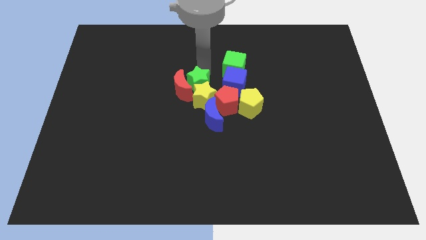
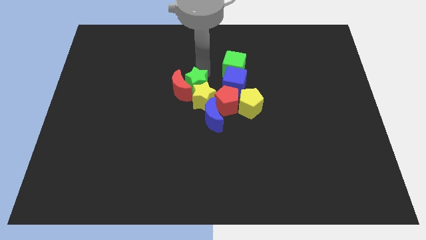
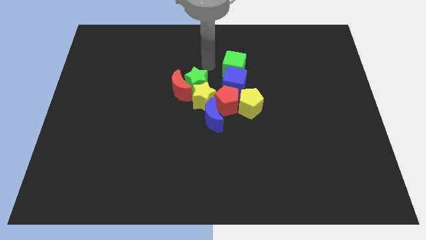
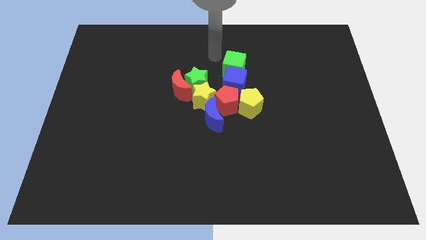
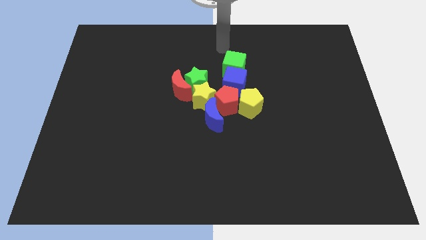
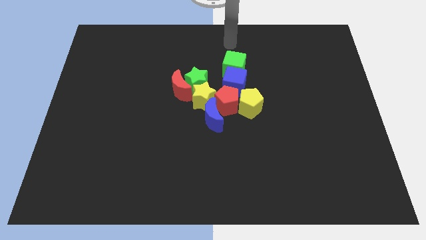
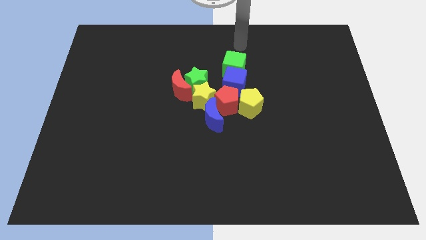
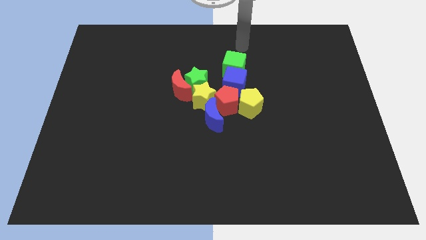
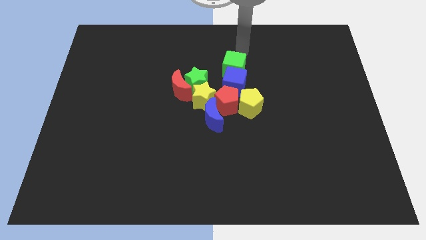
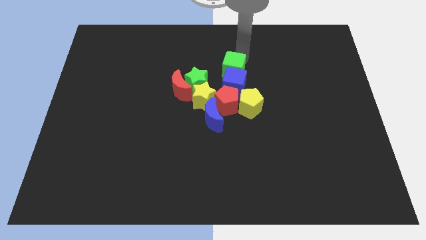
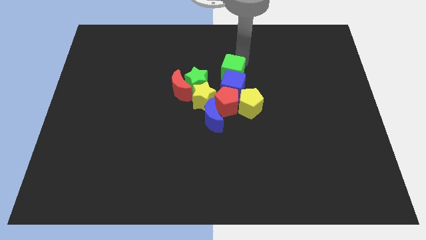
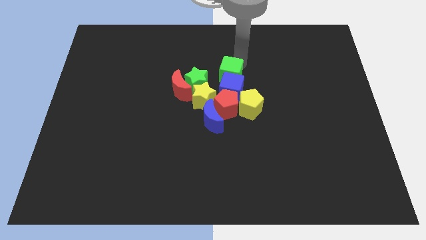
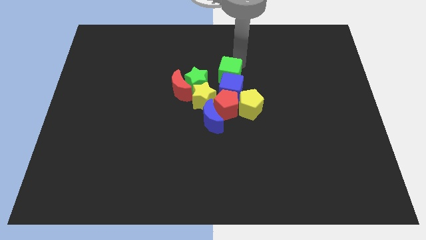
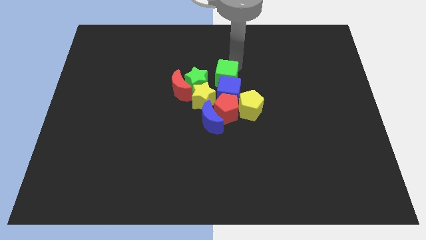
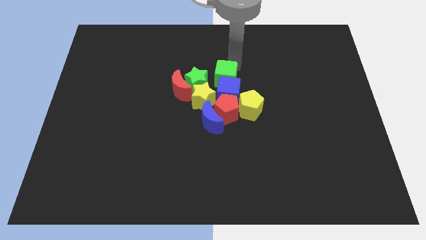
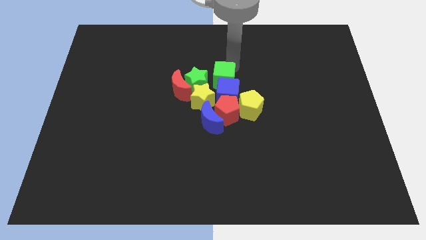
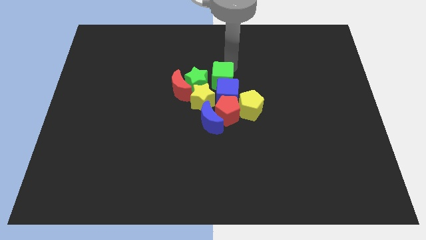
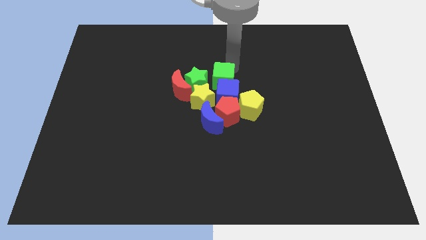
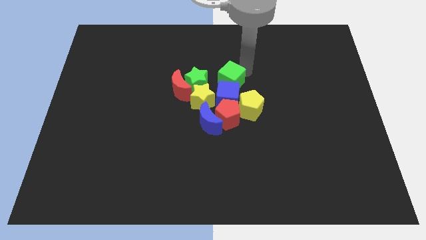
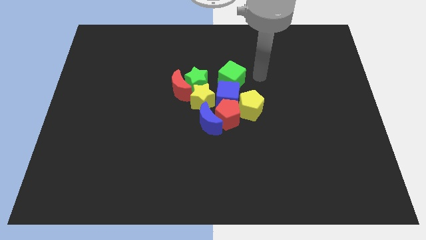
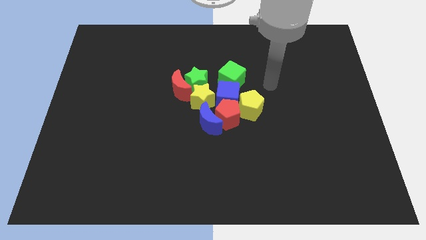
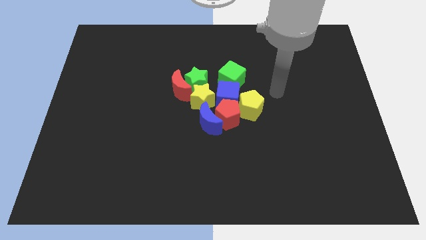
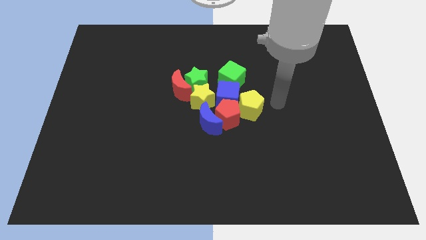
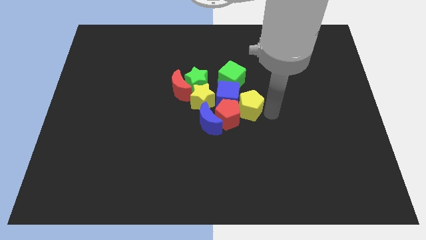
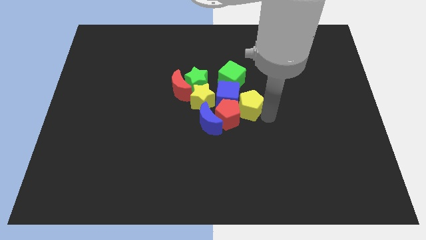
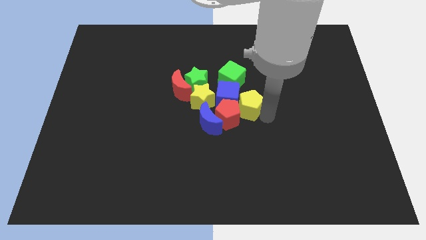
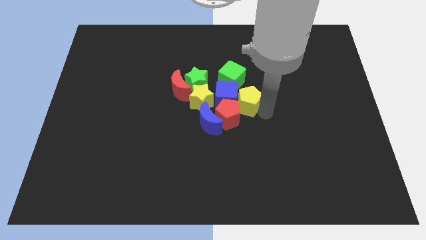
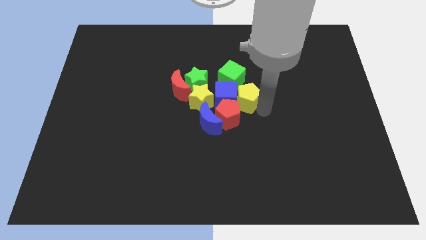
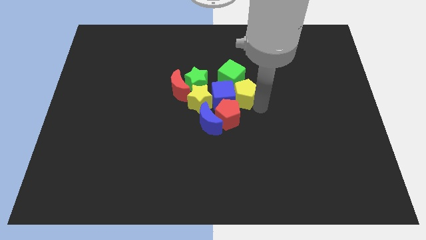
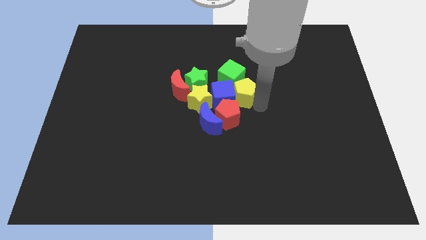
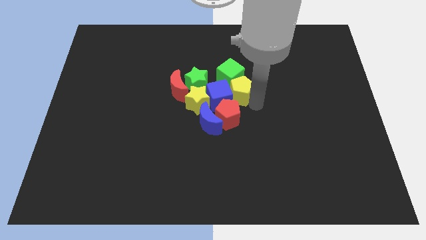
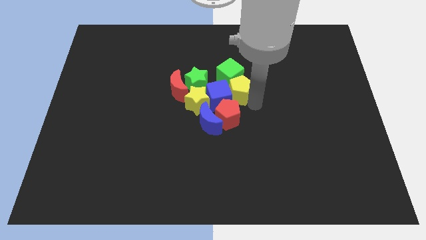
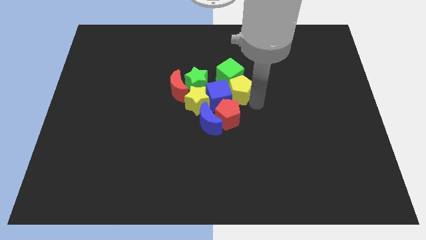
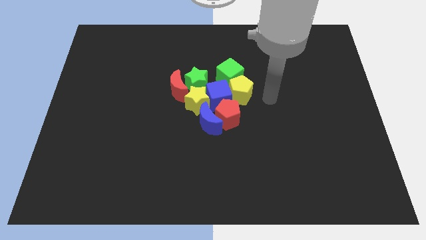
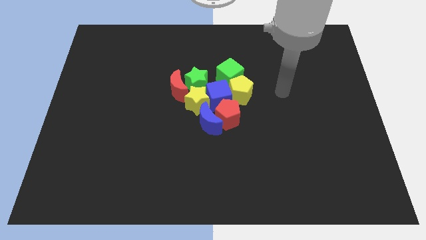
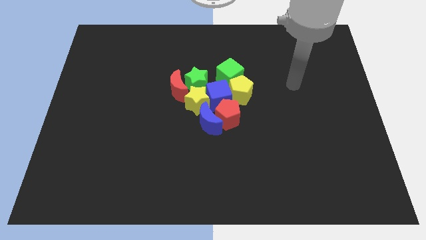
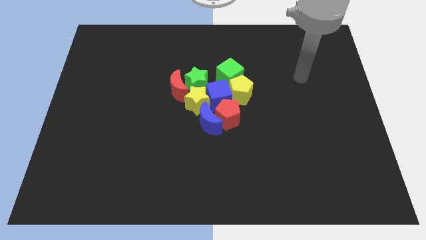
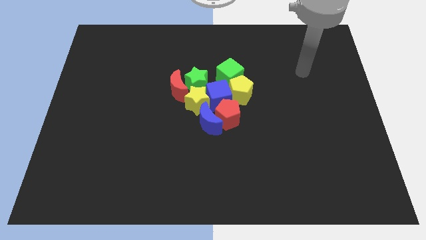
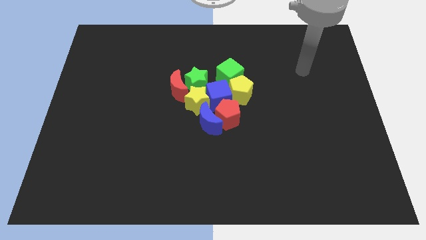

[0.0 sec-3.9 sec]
place all the blocks at the center of the board

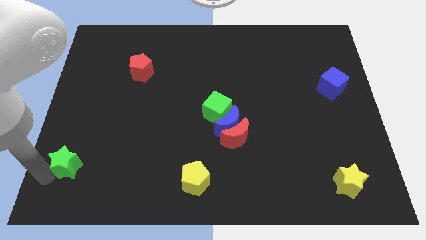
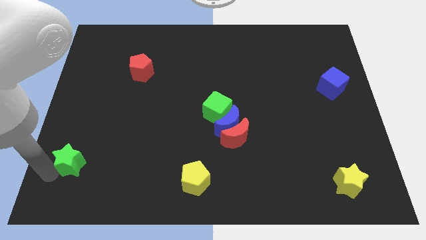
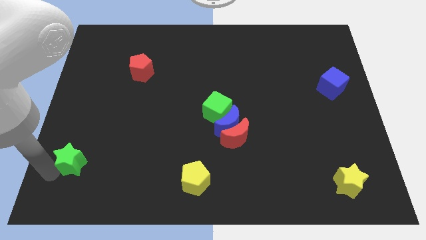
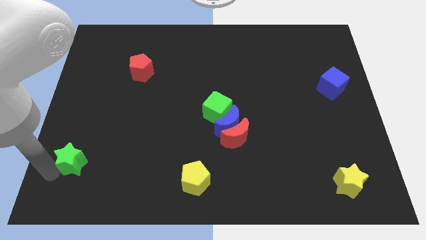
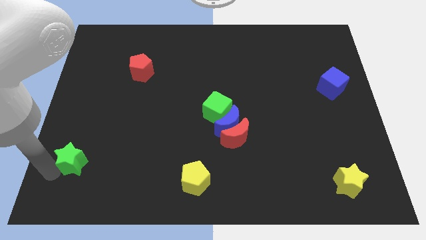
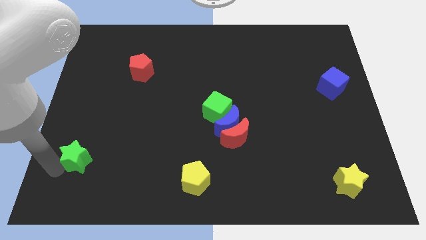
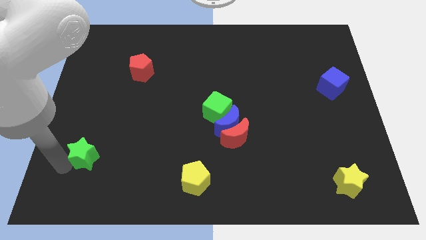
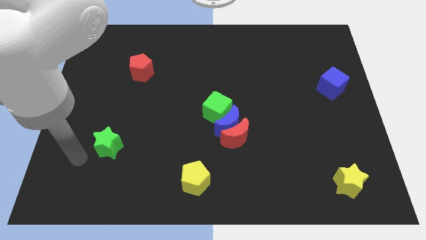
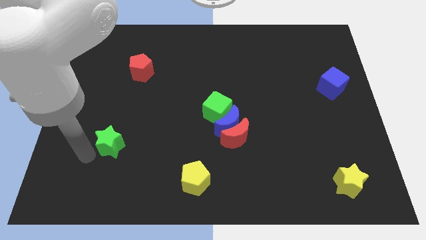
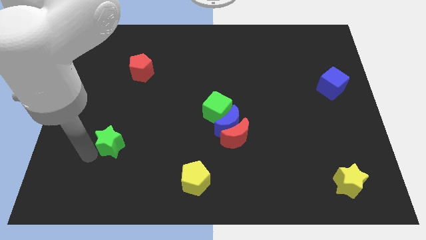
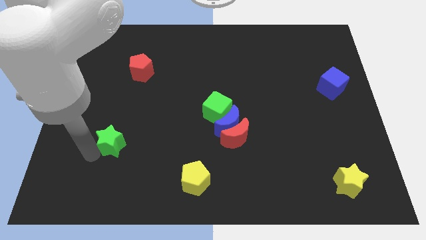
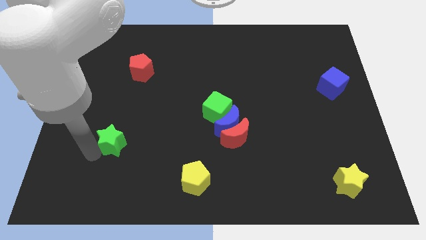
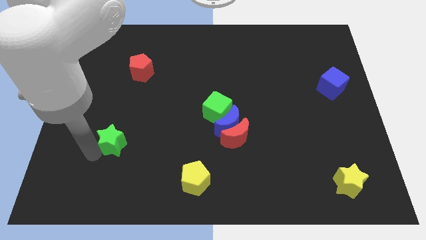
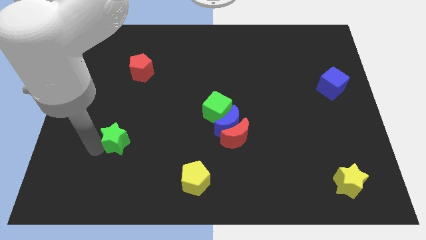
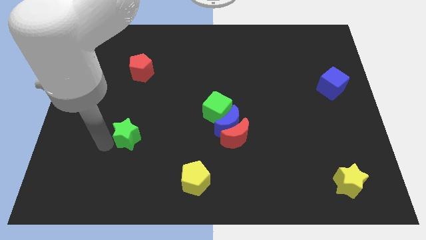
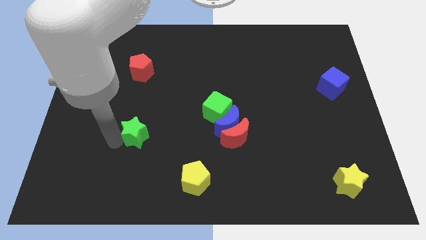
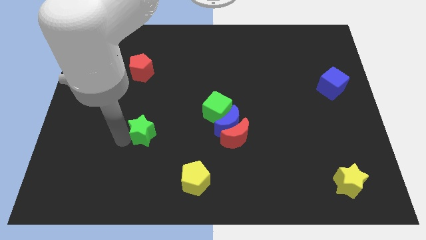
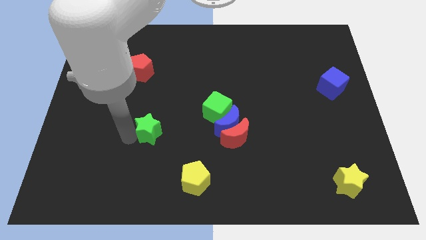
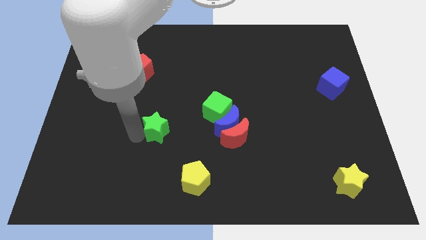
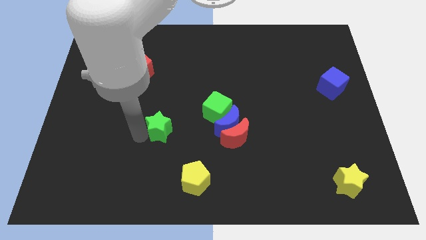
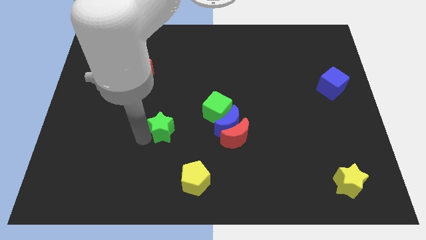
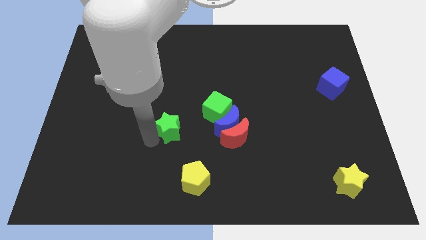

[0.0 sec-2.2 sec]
move the green star towards green cube

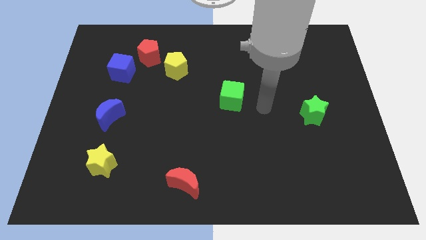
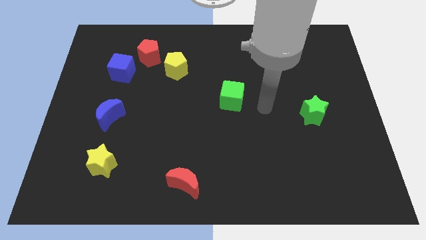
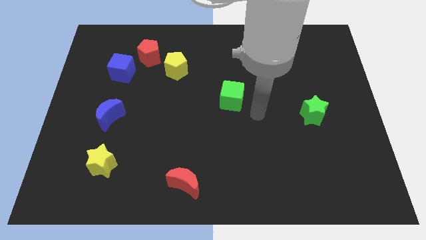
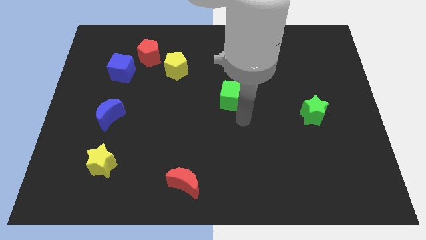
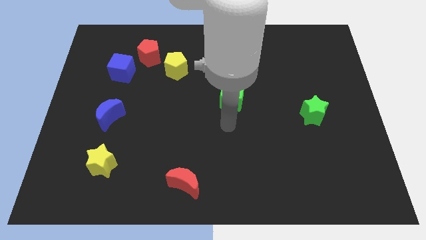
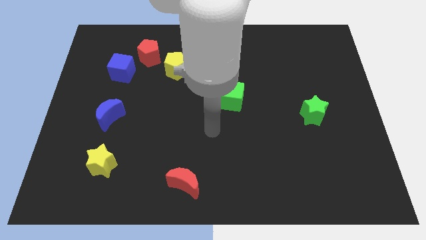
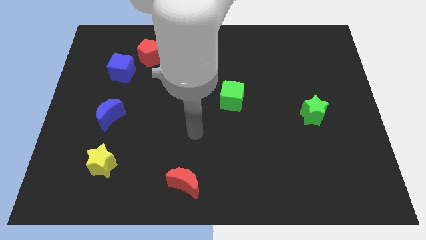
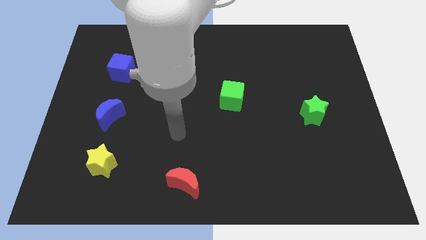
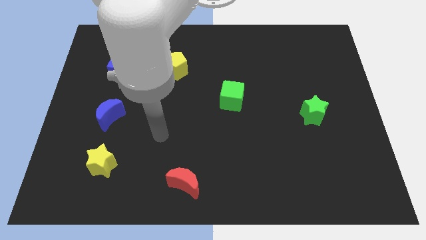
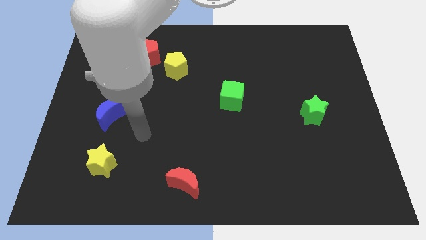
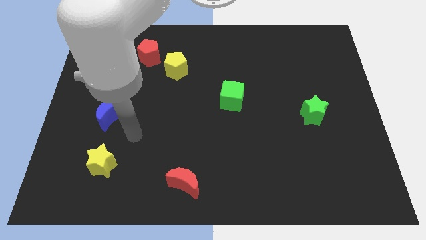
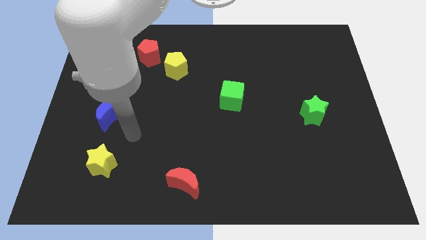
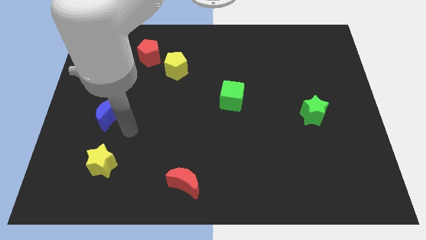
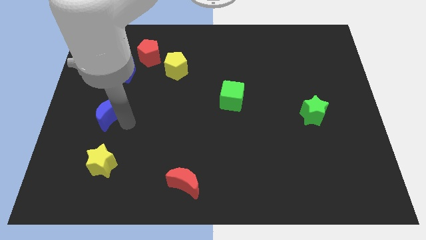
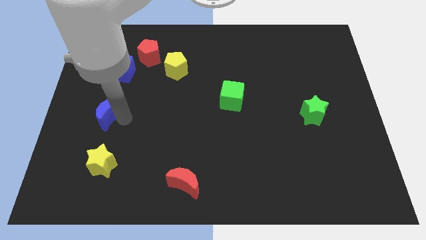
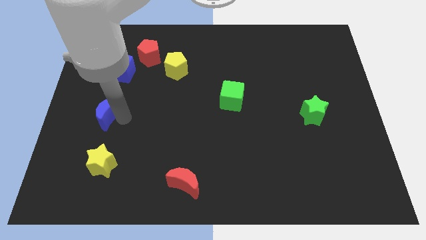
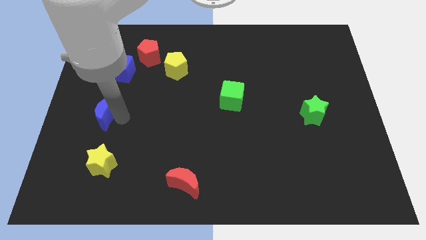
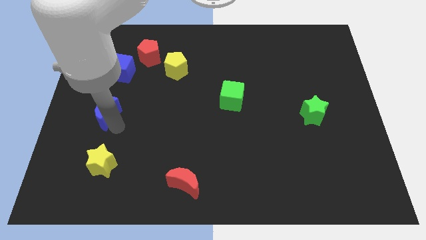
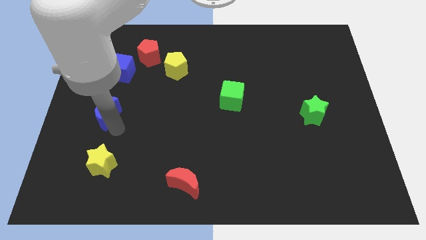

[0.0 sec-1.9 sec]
move the arm towards the blue crescent

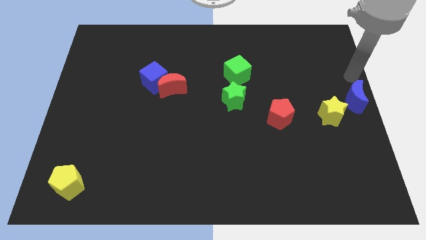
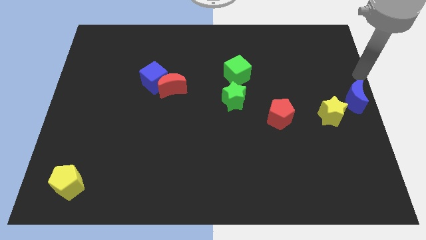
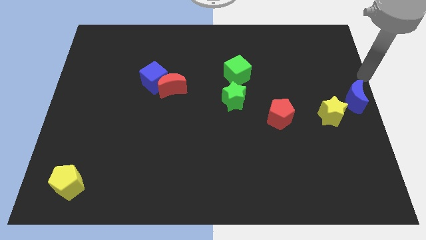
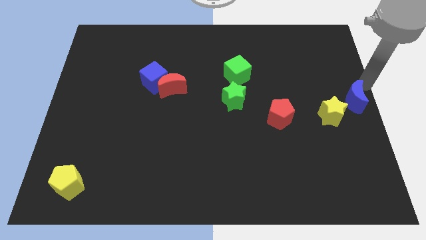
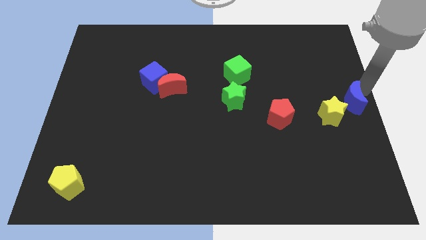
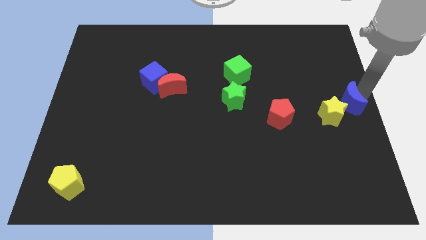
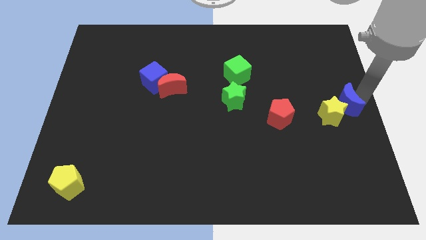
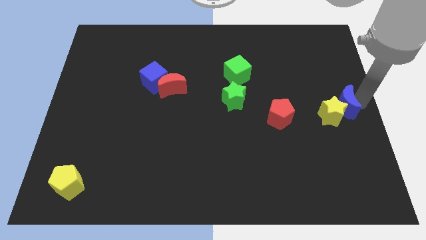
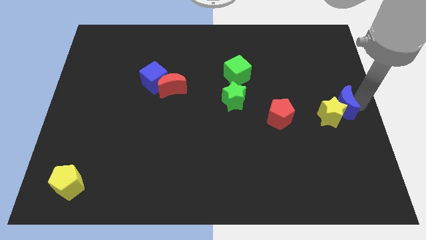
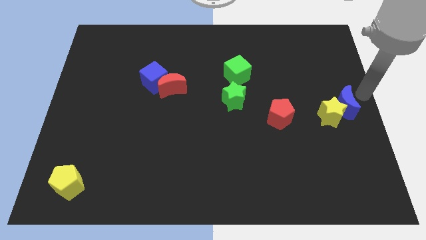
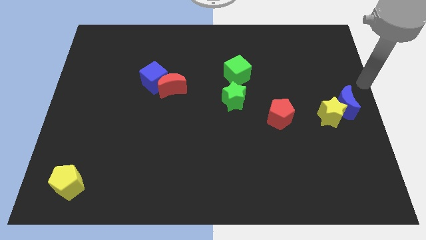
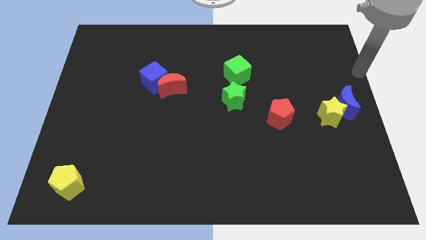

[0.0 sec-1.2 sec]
make the blue crescent to touch the yellow star
